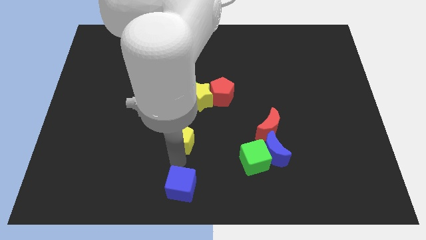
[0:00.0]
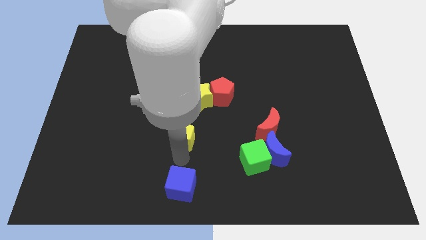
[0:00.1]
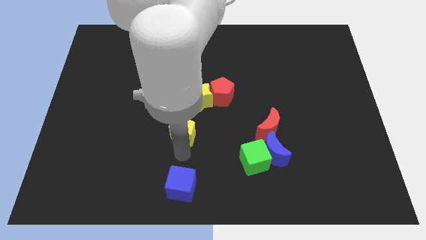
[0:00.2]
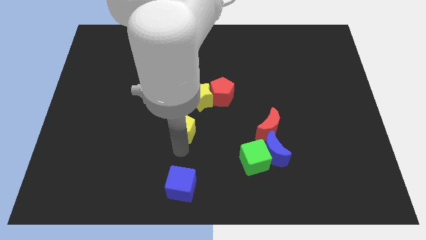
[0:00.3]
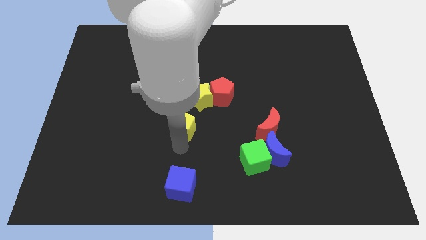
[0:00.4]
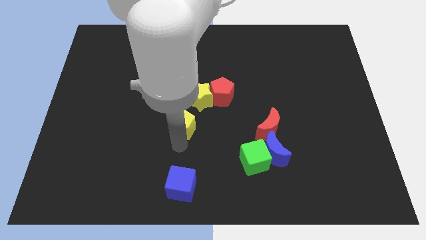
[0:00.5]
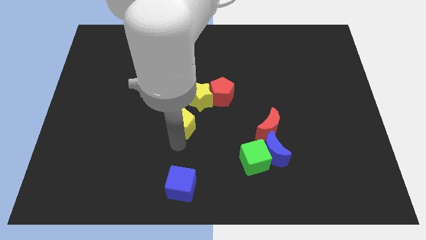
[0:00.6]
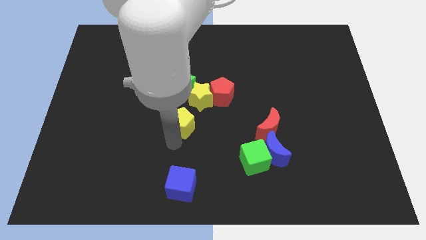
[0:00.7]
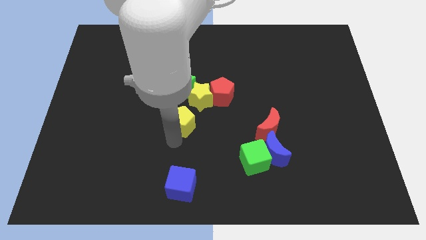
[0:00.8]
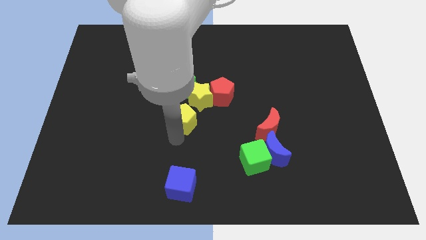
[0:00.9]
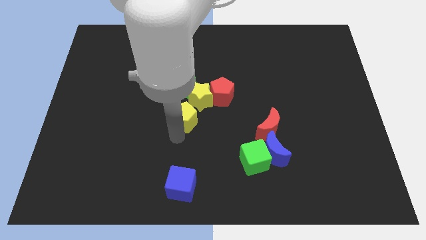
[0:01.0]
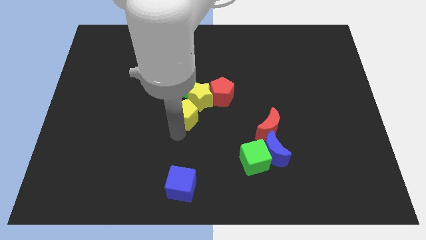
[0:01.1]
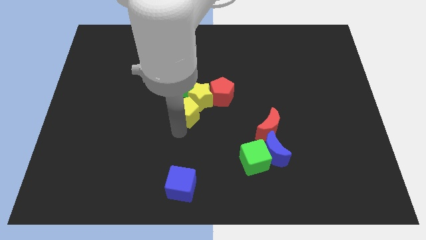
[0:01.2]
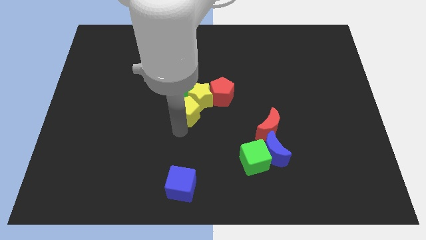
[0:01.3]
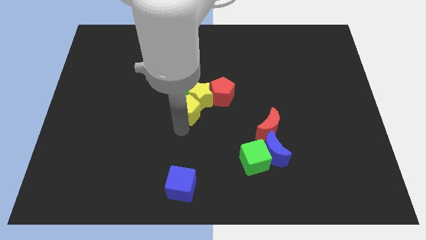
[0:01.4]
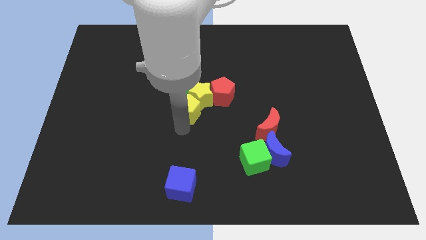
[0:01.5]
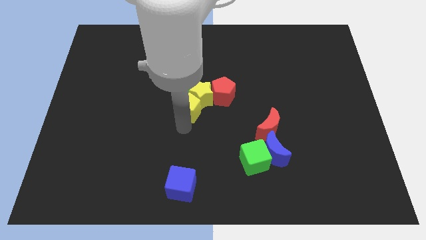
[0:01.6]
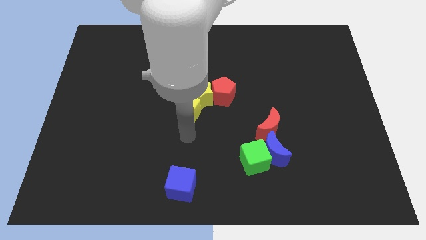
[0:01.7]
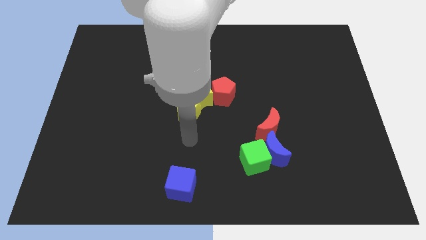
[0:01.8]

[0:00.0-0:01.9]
attach the yellow pentagon to the yellow star

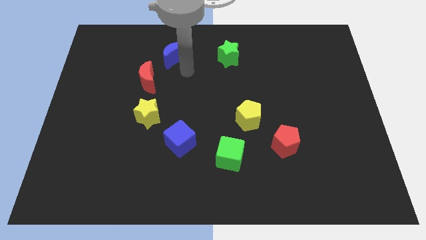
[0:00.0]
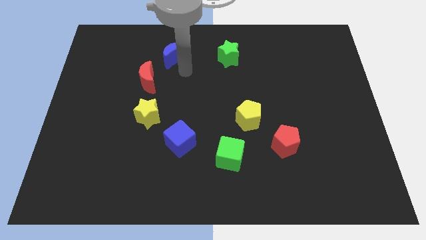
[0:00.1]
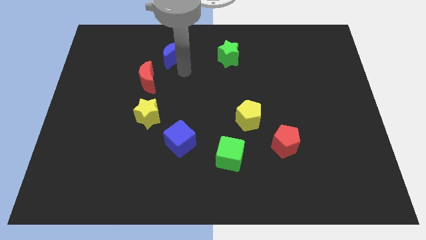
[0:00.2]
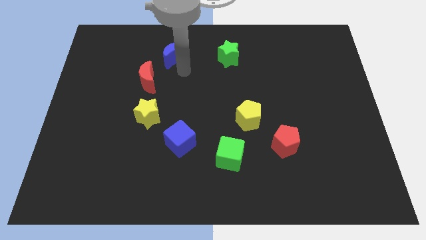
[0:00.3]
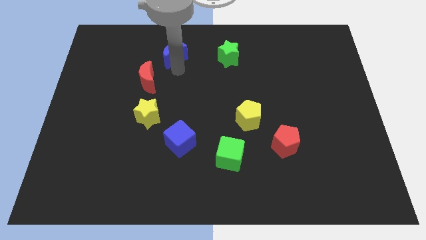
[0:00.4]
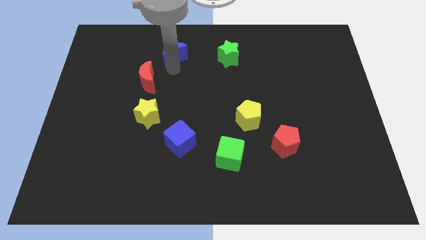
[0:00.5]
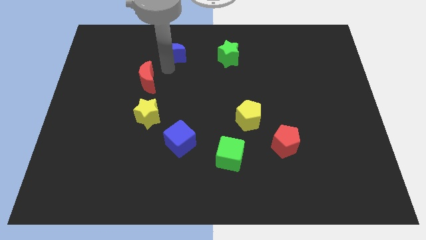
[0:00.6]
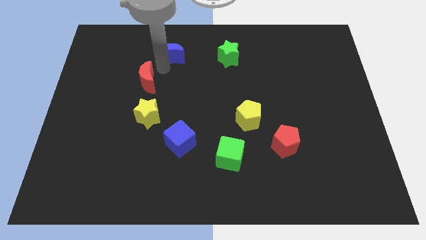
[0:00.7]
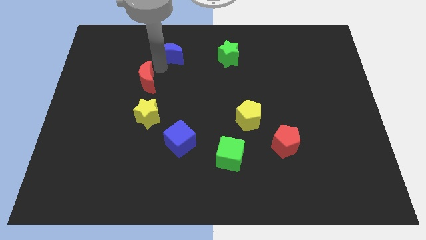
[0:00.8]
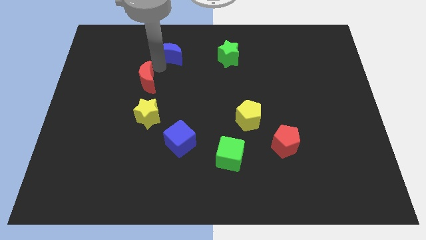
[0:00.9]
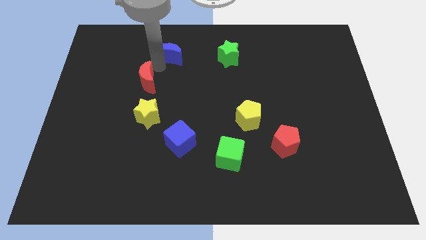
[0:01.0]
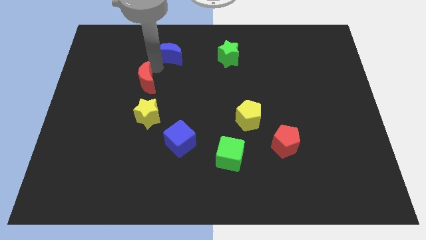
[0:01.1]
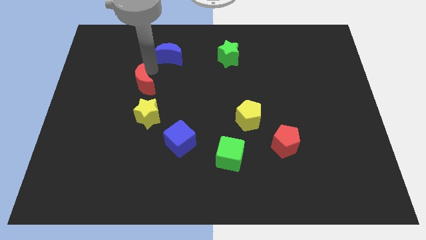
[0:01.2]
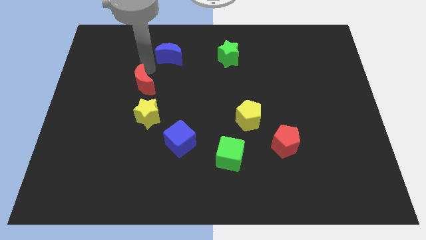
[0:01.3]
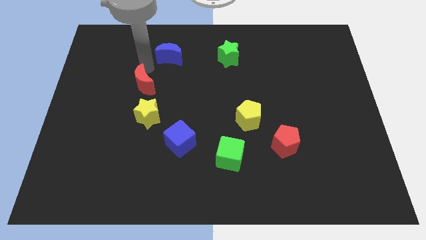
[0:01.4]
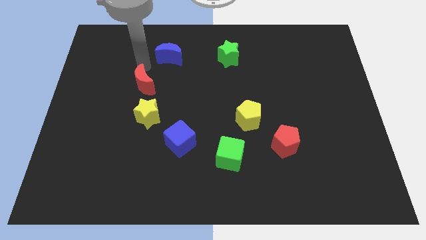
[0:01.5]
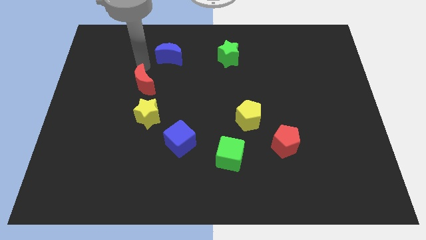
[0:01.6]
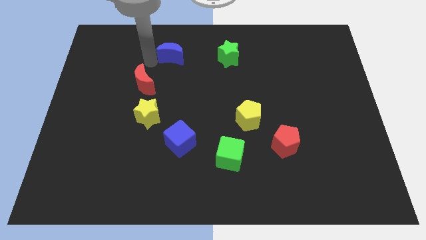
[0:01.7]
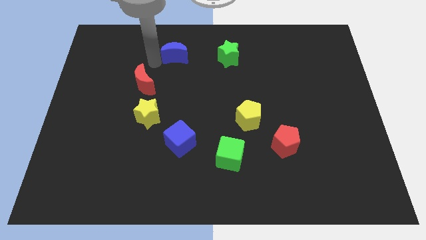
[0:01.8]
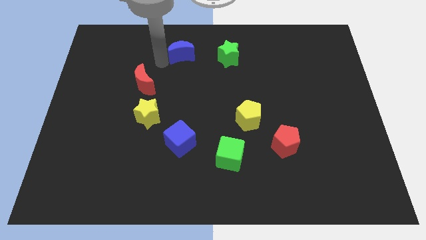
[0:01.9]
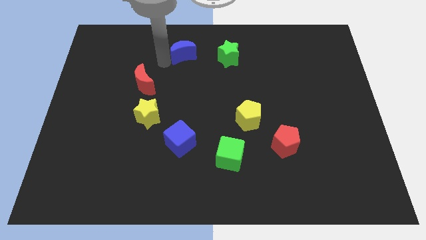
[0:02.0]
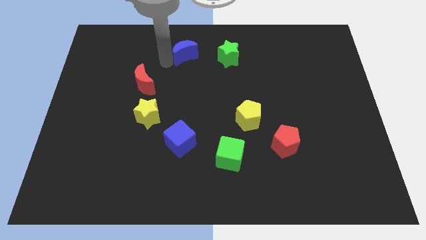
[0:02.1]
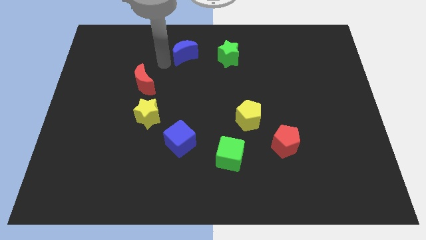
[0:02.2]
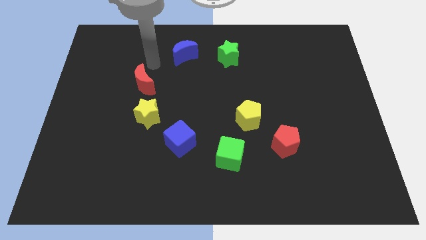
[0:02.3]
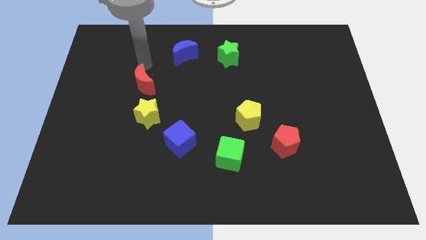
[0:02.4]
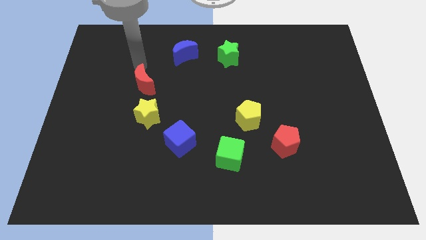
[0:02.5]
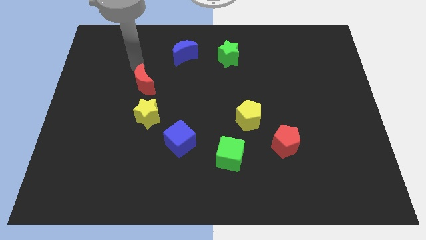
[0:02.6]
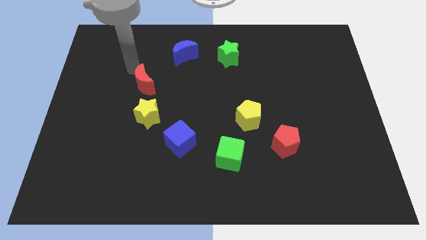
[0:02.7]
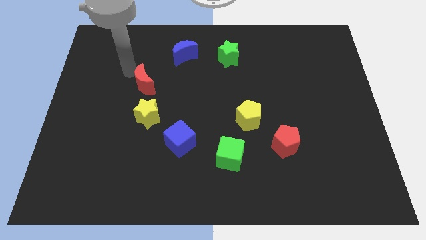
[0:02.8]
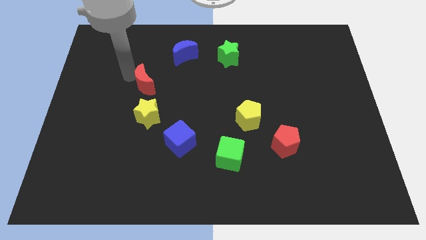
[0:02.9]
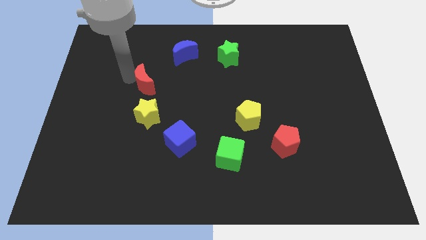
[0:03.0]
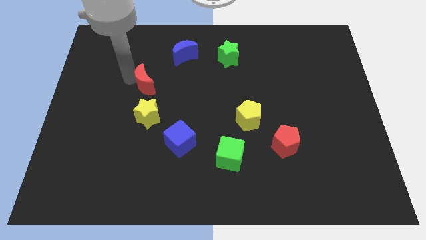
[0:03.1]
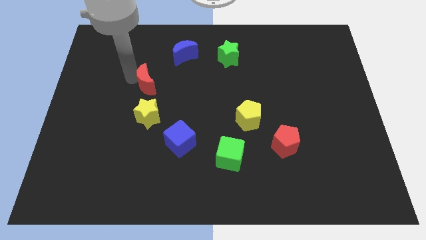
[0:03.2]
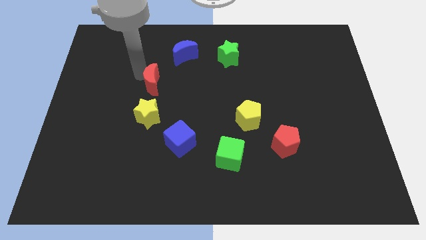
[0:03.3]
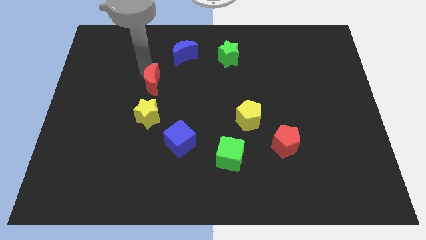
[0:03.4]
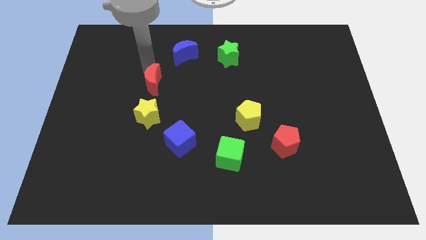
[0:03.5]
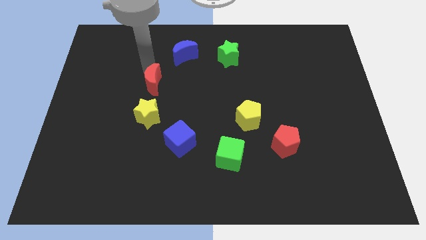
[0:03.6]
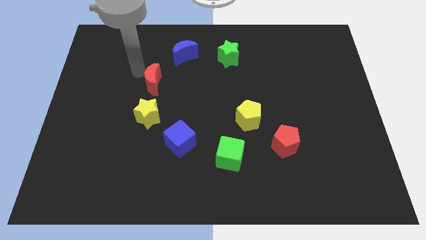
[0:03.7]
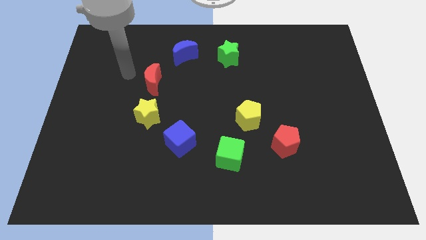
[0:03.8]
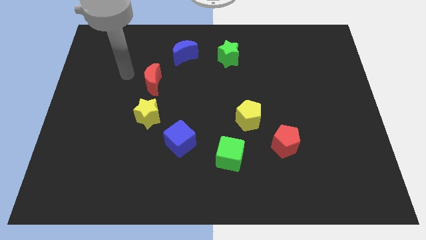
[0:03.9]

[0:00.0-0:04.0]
move the red moon and blue moon diagonal to each other

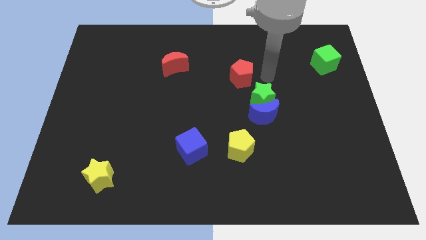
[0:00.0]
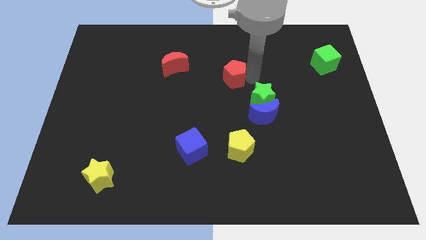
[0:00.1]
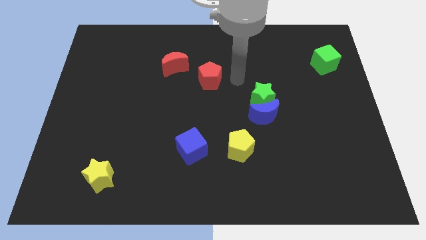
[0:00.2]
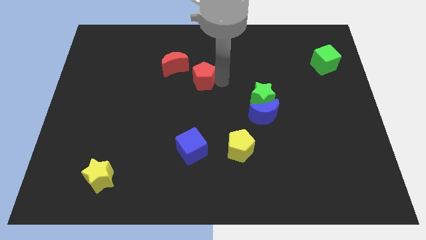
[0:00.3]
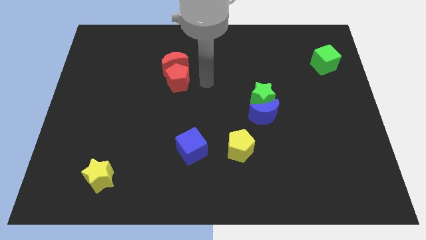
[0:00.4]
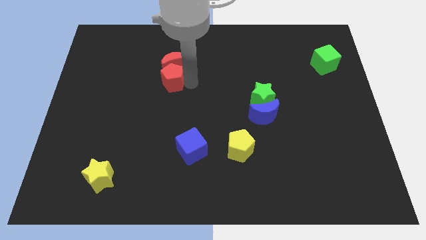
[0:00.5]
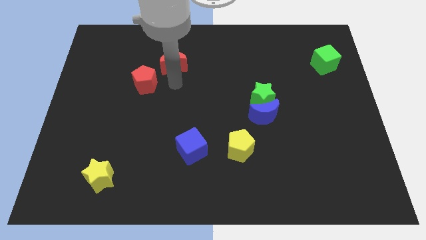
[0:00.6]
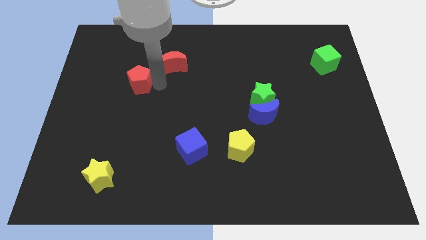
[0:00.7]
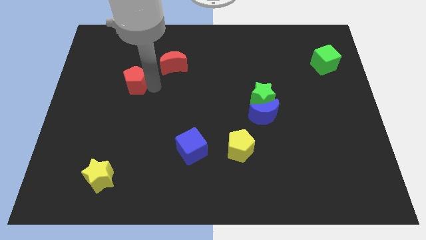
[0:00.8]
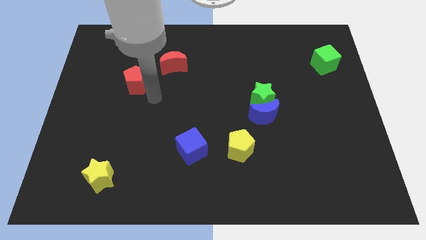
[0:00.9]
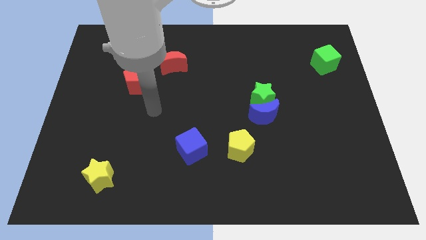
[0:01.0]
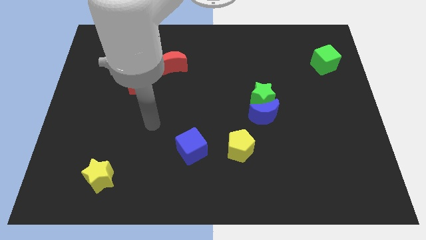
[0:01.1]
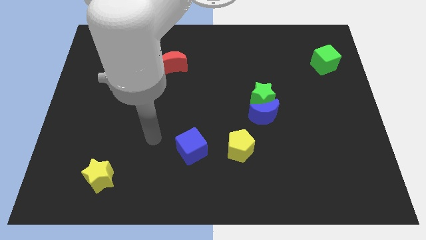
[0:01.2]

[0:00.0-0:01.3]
push the red pentagon to the left side of the board

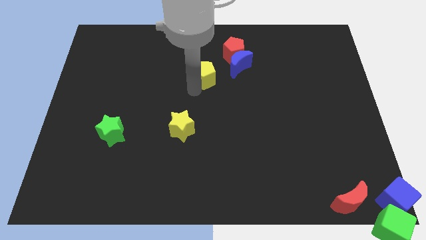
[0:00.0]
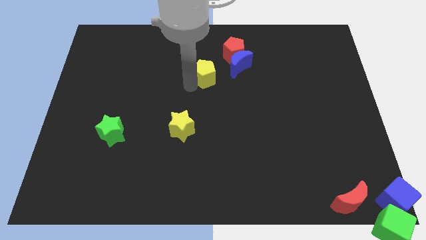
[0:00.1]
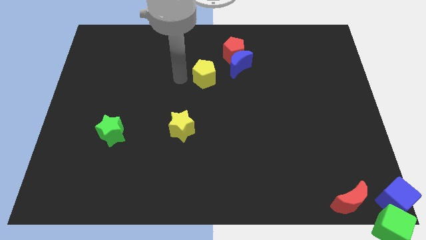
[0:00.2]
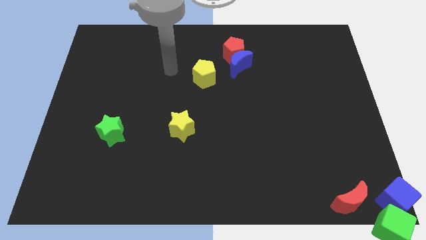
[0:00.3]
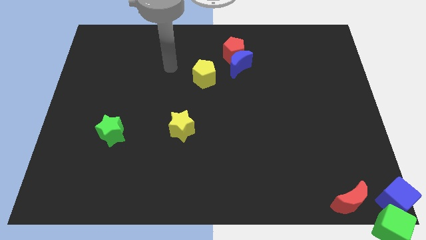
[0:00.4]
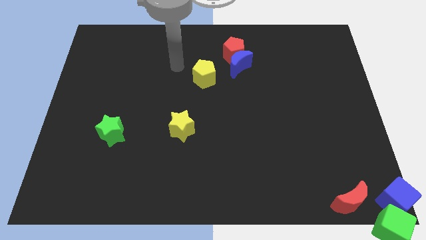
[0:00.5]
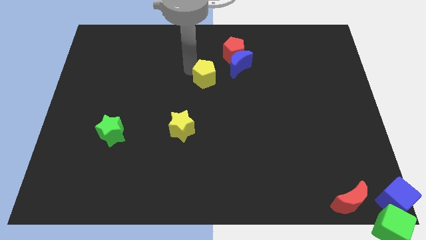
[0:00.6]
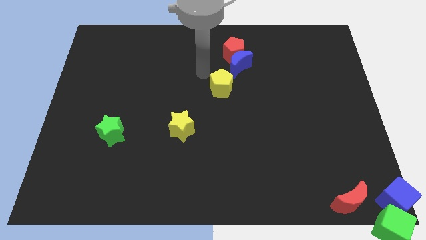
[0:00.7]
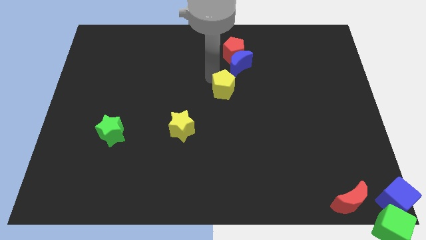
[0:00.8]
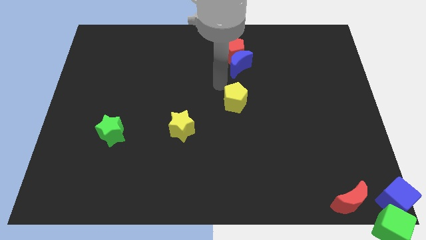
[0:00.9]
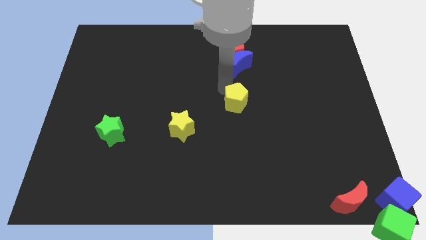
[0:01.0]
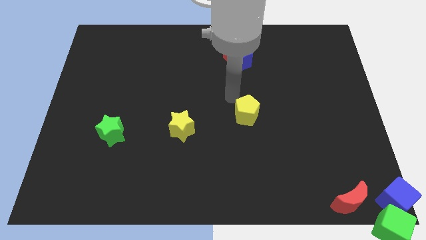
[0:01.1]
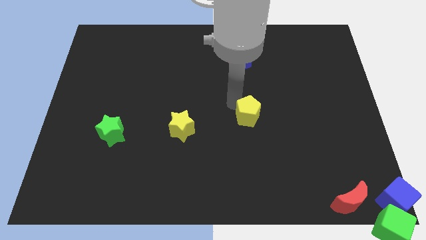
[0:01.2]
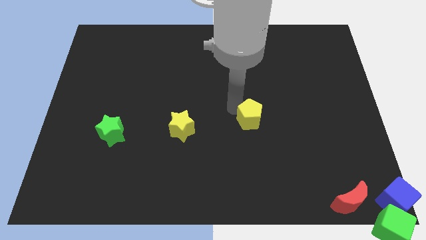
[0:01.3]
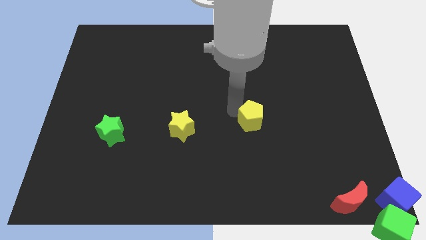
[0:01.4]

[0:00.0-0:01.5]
place the yellow pentagon below the blue moon

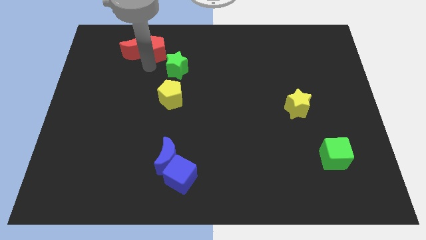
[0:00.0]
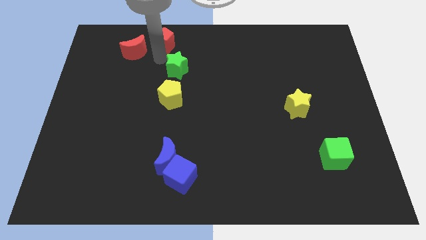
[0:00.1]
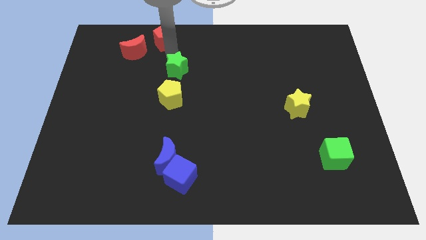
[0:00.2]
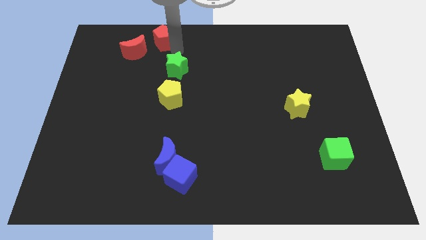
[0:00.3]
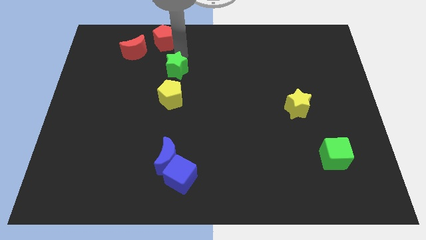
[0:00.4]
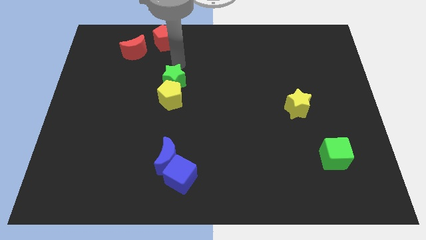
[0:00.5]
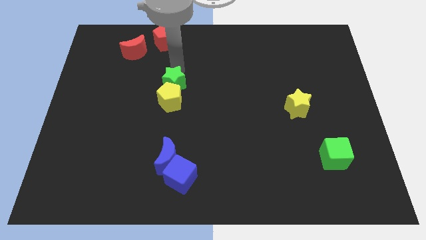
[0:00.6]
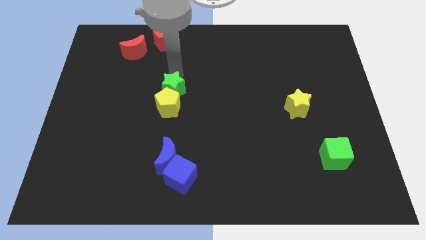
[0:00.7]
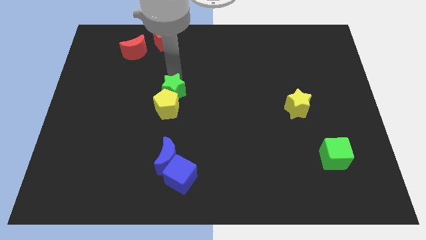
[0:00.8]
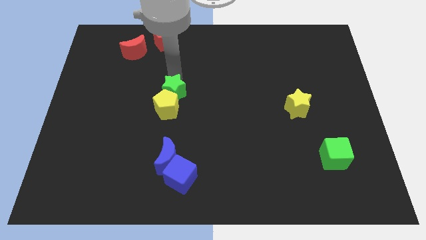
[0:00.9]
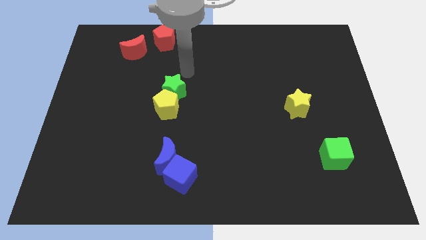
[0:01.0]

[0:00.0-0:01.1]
place green star into yellow pentagon
